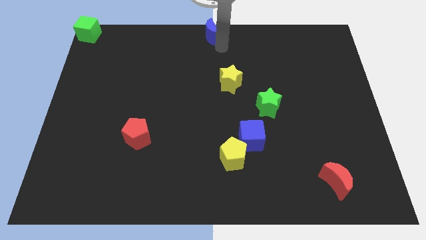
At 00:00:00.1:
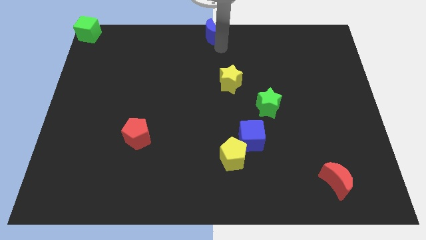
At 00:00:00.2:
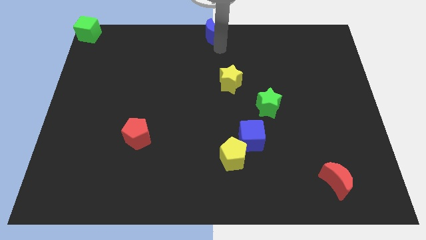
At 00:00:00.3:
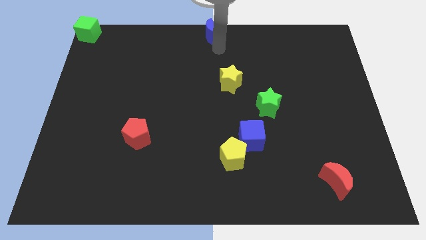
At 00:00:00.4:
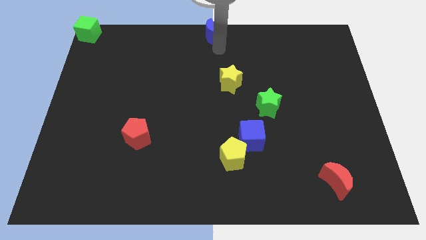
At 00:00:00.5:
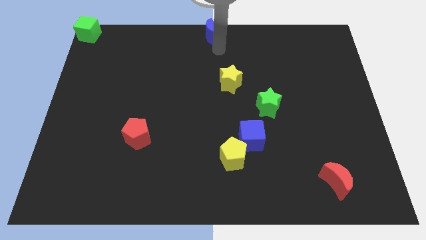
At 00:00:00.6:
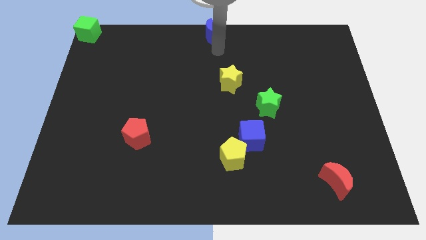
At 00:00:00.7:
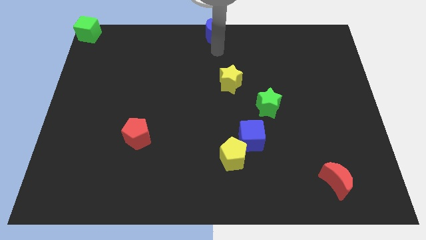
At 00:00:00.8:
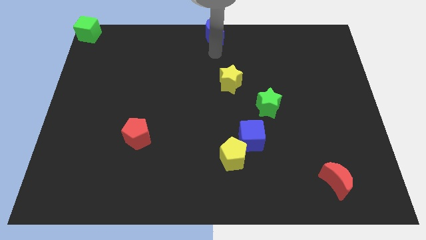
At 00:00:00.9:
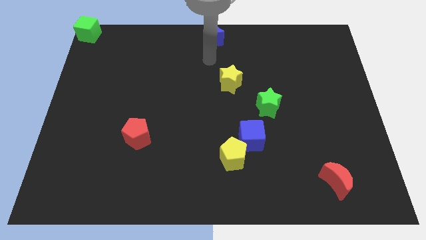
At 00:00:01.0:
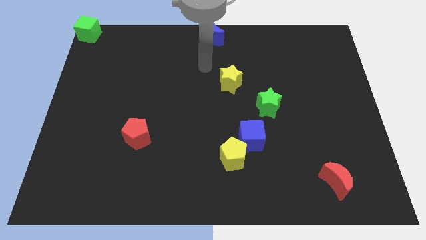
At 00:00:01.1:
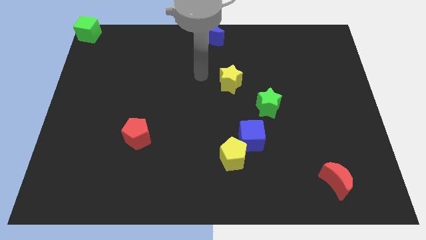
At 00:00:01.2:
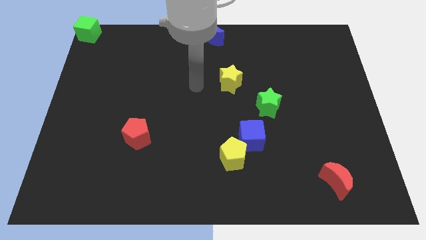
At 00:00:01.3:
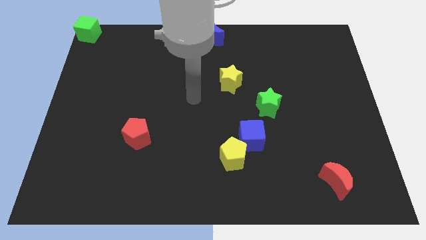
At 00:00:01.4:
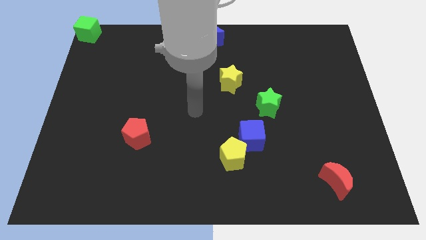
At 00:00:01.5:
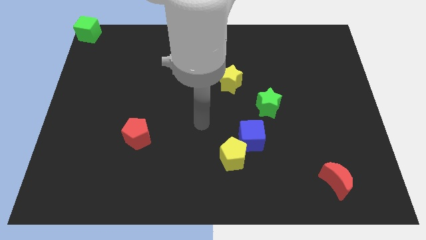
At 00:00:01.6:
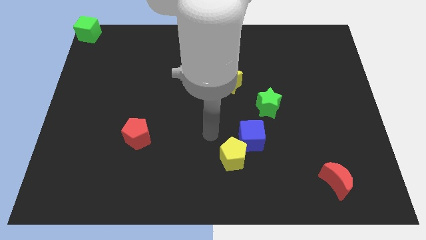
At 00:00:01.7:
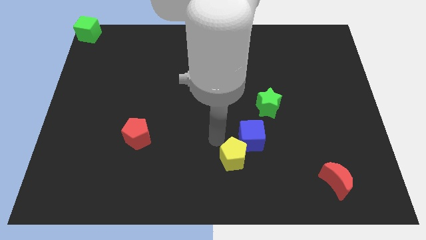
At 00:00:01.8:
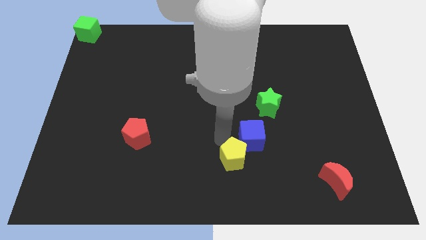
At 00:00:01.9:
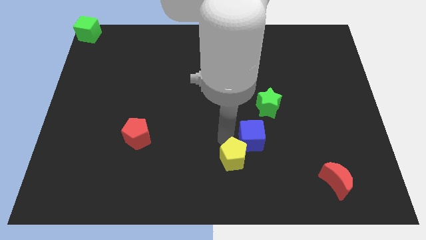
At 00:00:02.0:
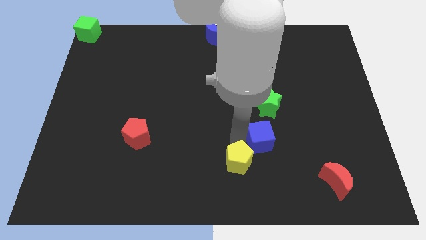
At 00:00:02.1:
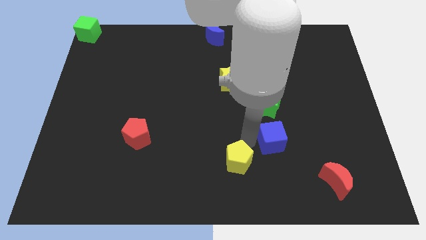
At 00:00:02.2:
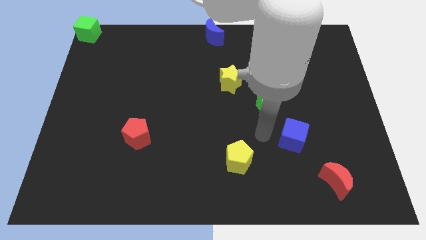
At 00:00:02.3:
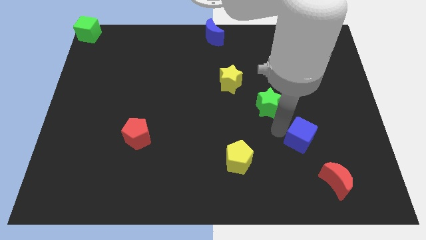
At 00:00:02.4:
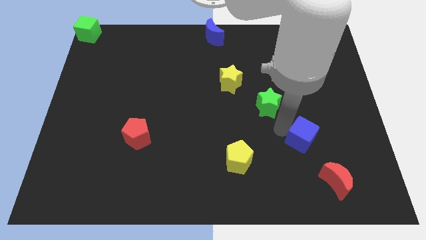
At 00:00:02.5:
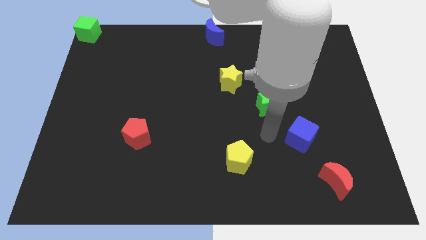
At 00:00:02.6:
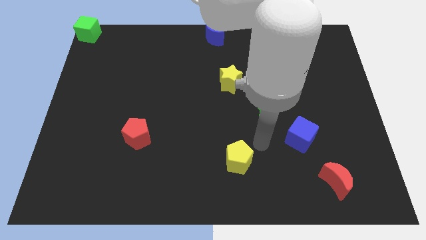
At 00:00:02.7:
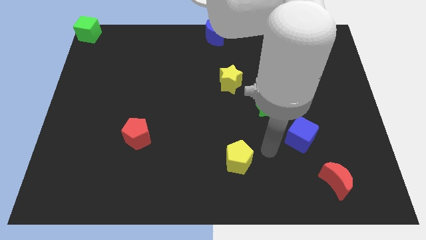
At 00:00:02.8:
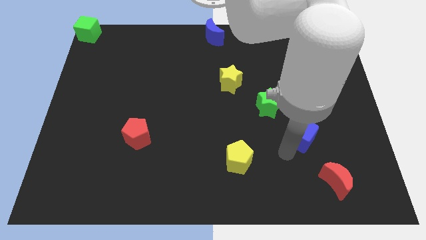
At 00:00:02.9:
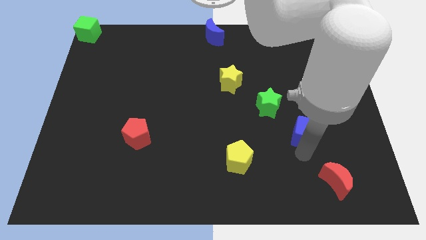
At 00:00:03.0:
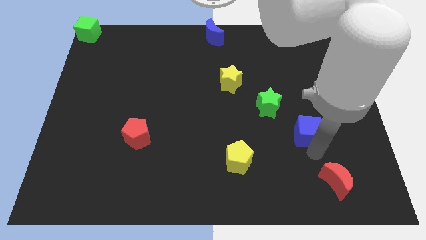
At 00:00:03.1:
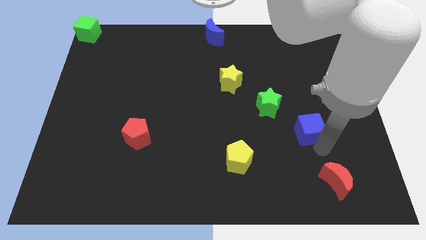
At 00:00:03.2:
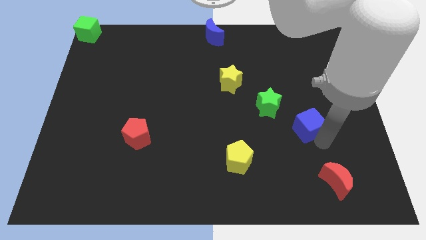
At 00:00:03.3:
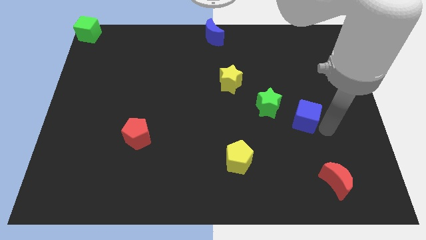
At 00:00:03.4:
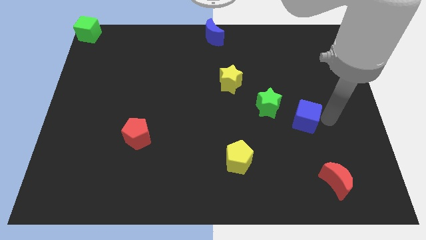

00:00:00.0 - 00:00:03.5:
separate the blue cube from the yellow pentagon

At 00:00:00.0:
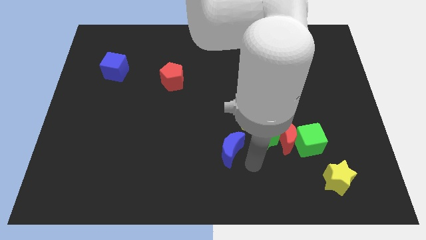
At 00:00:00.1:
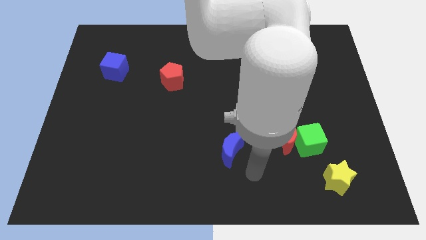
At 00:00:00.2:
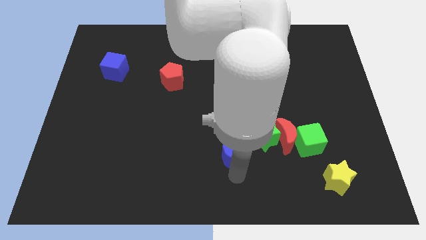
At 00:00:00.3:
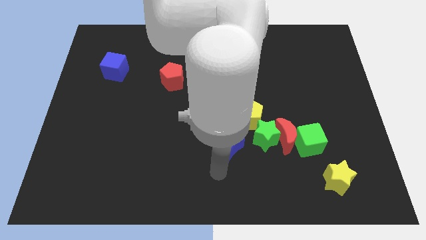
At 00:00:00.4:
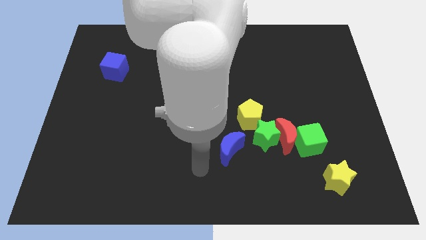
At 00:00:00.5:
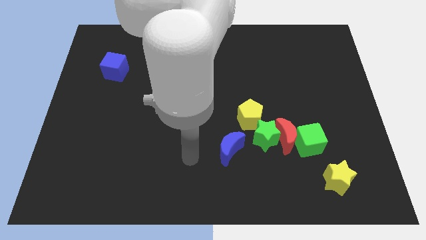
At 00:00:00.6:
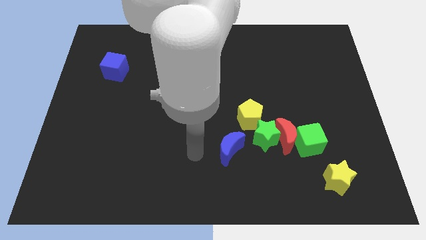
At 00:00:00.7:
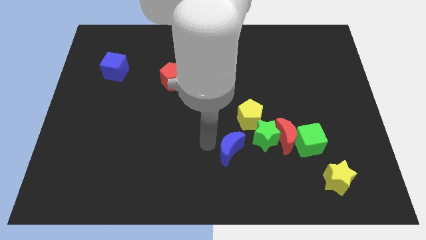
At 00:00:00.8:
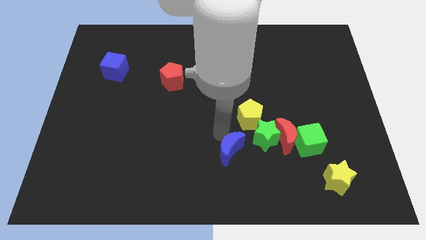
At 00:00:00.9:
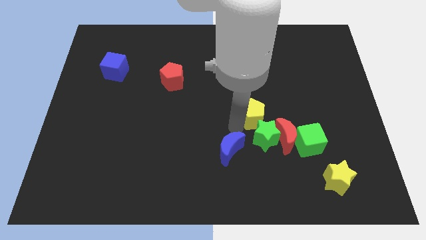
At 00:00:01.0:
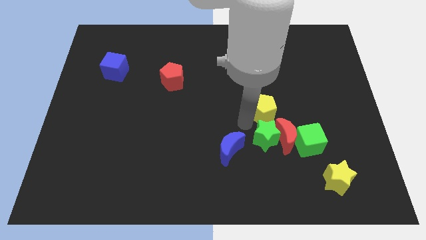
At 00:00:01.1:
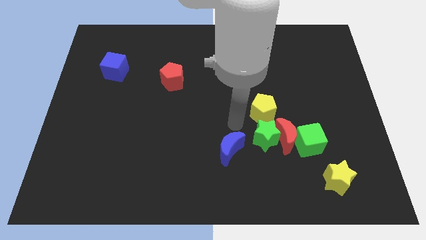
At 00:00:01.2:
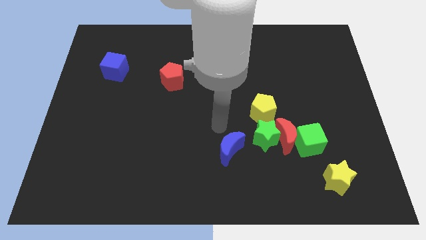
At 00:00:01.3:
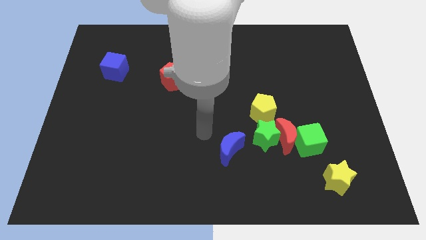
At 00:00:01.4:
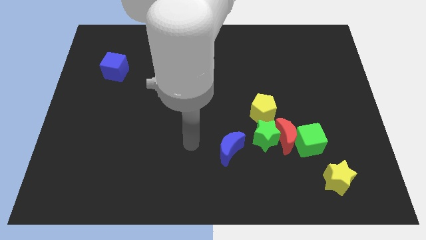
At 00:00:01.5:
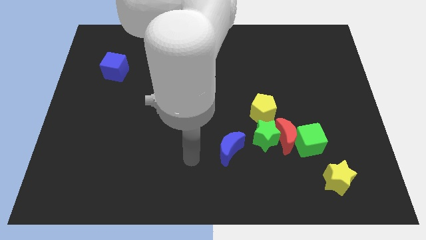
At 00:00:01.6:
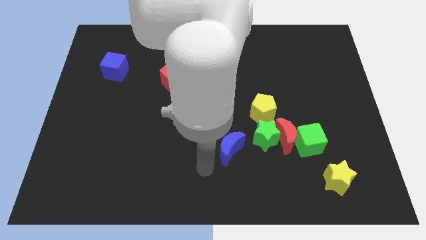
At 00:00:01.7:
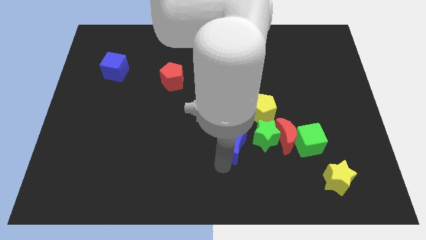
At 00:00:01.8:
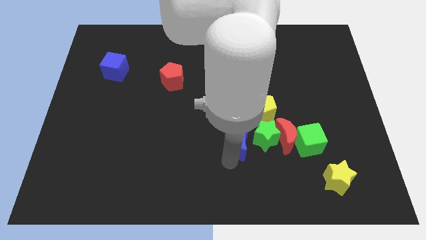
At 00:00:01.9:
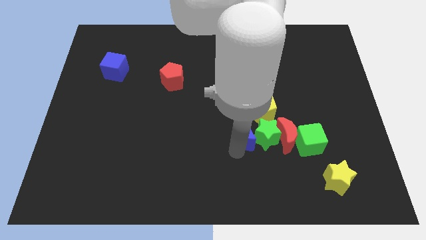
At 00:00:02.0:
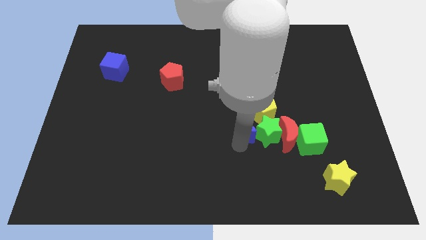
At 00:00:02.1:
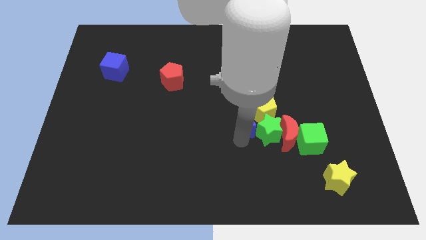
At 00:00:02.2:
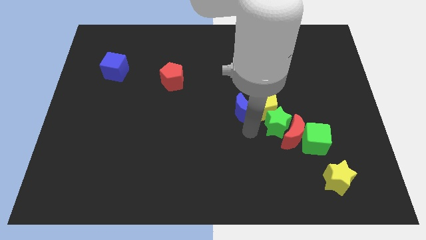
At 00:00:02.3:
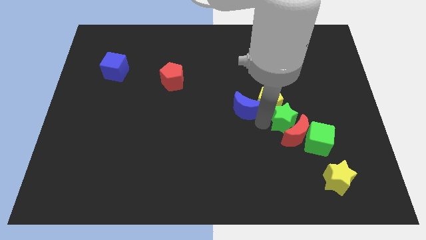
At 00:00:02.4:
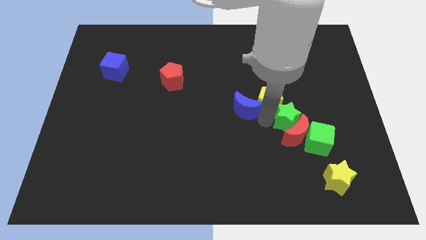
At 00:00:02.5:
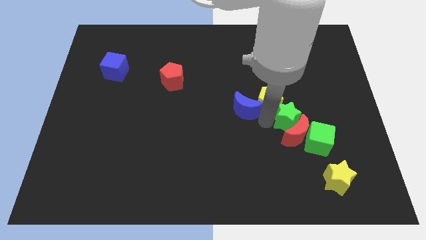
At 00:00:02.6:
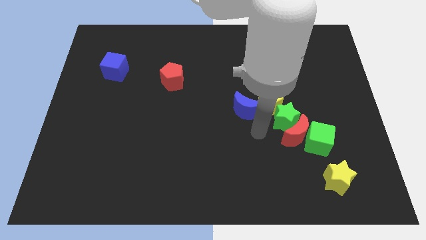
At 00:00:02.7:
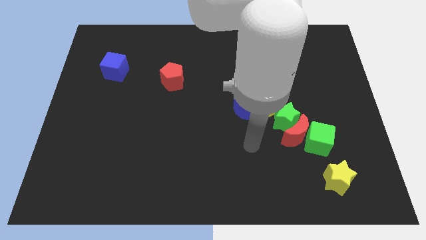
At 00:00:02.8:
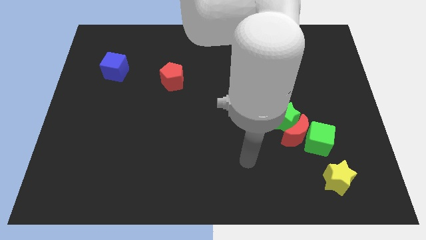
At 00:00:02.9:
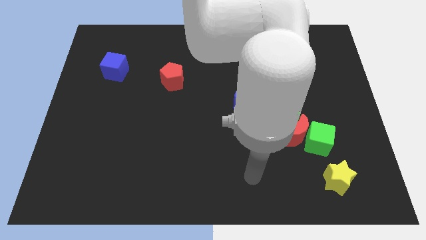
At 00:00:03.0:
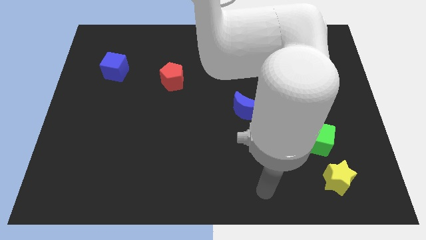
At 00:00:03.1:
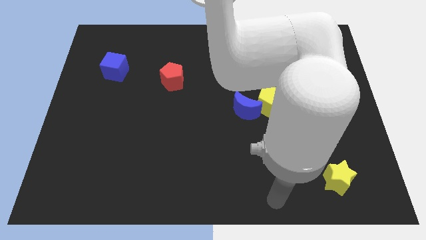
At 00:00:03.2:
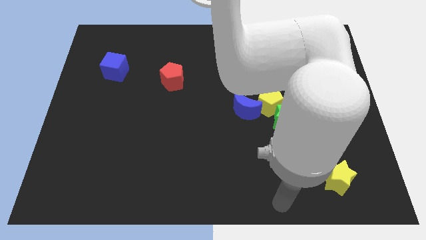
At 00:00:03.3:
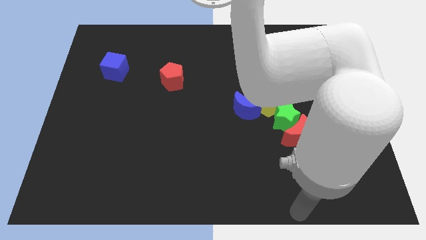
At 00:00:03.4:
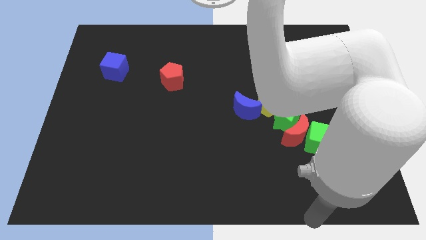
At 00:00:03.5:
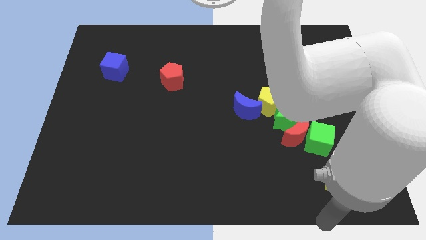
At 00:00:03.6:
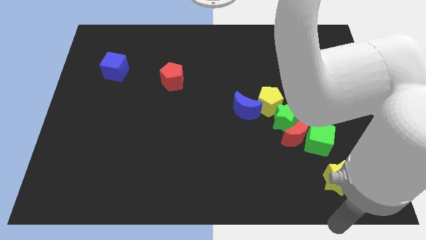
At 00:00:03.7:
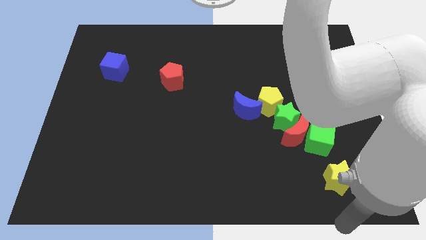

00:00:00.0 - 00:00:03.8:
push the blue moon at the bottom left side of the yellow pentagon

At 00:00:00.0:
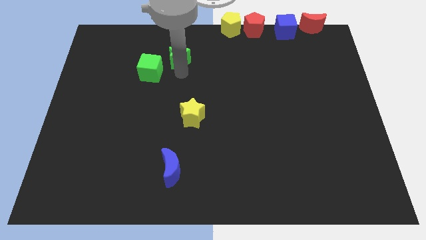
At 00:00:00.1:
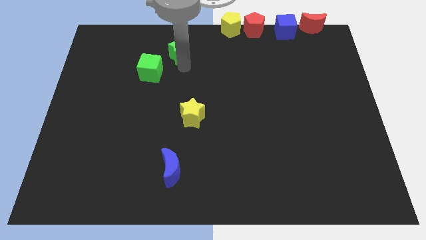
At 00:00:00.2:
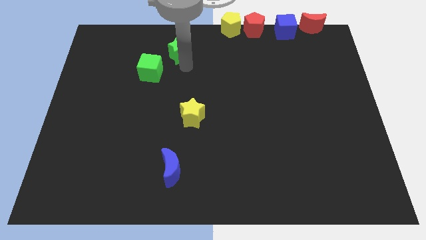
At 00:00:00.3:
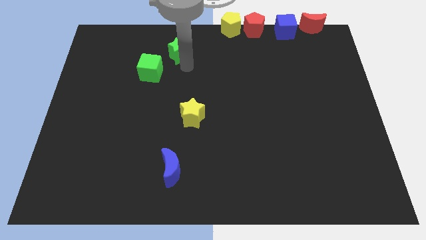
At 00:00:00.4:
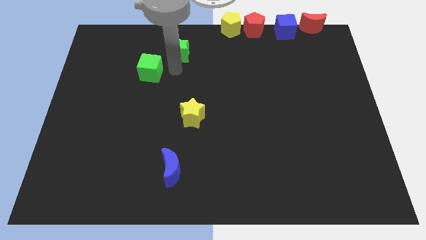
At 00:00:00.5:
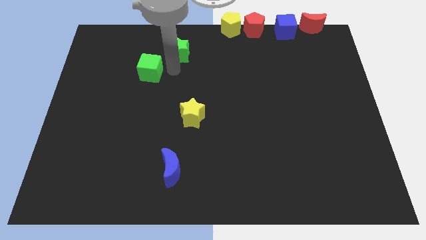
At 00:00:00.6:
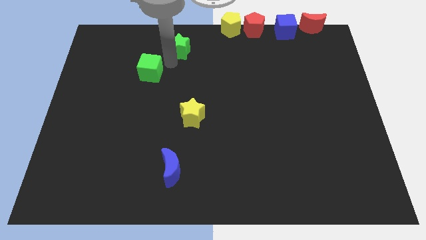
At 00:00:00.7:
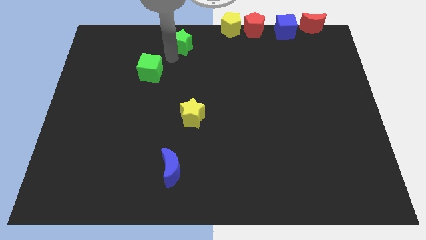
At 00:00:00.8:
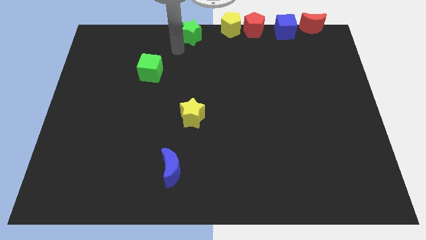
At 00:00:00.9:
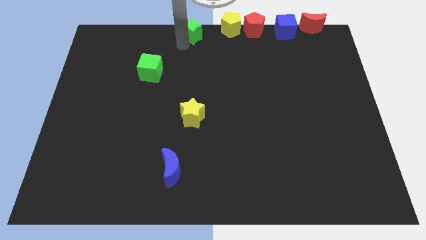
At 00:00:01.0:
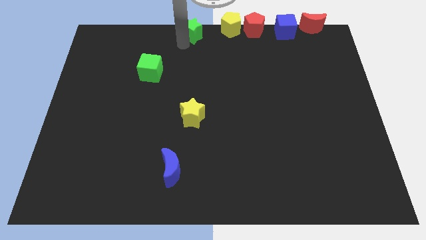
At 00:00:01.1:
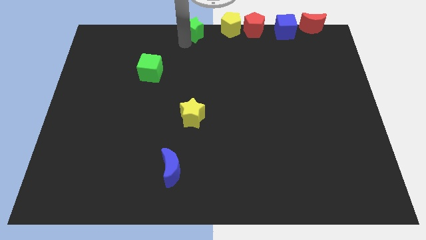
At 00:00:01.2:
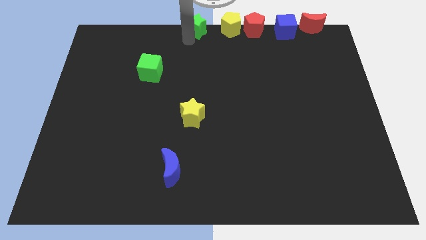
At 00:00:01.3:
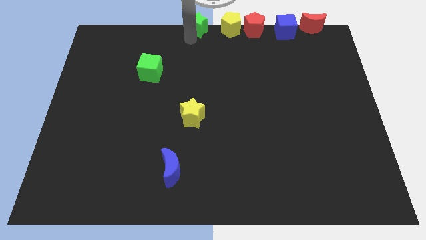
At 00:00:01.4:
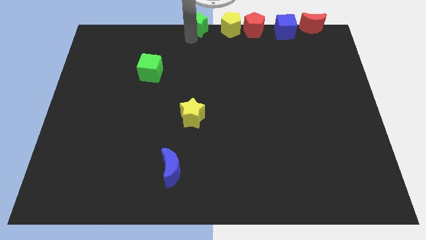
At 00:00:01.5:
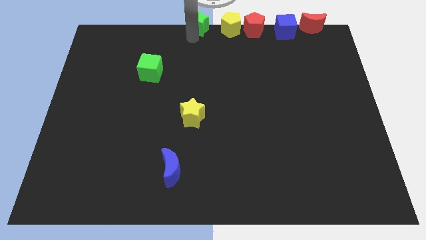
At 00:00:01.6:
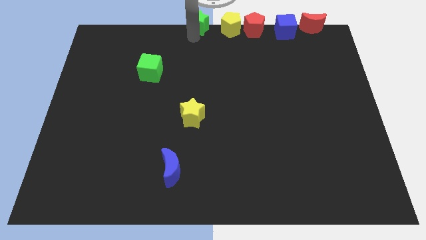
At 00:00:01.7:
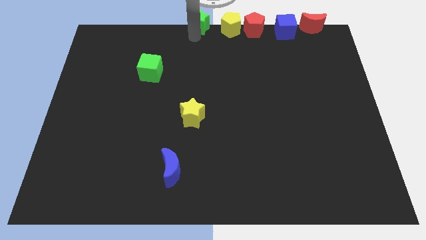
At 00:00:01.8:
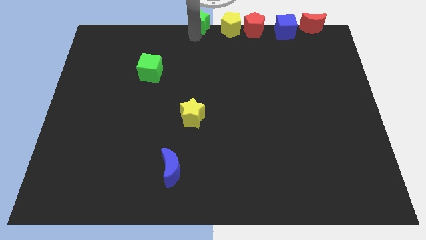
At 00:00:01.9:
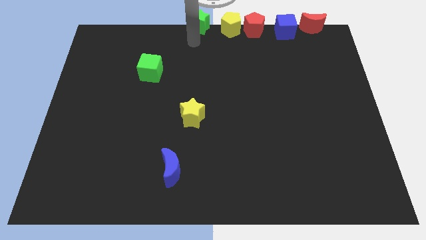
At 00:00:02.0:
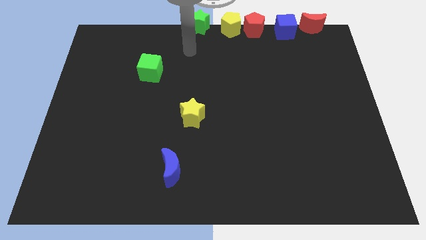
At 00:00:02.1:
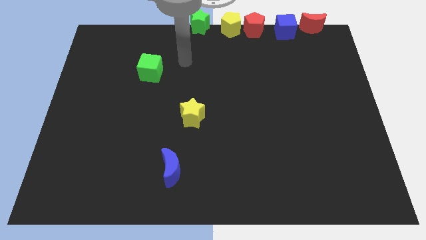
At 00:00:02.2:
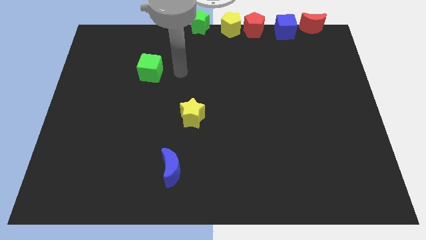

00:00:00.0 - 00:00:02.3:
place green star at the top center of the board
